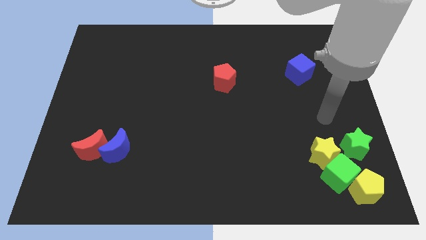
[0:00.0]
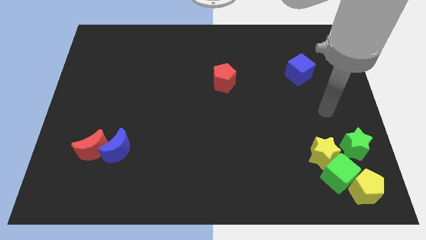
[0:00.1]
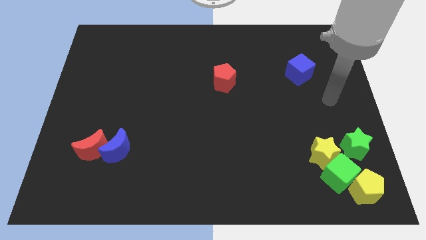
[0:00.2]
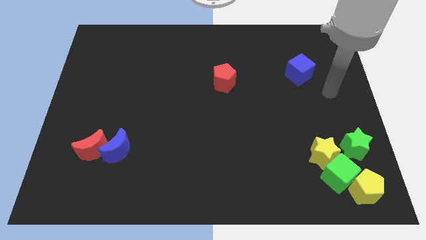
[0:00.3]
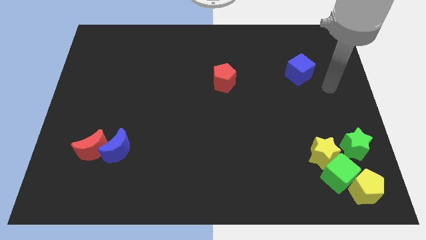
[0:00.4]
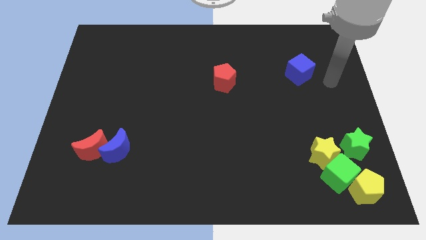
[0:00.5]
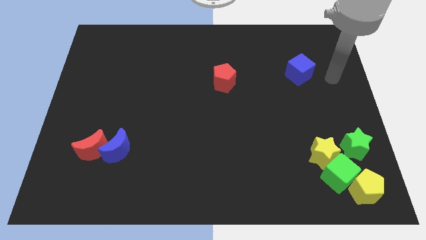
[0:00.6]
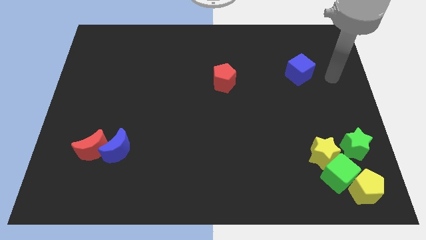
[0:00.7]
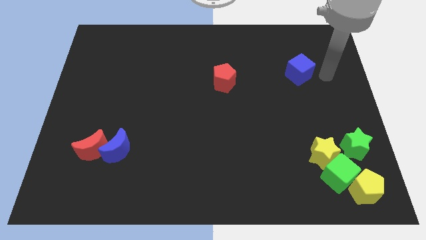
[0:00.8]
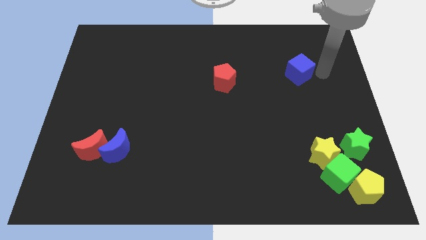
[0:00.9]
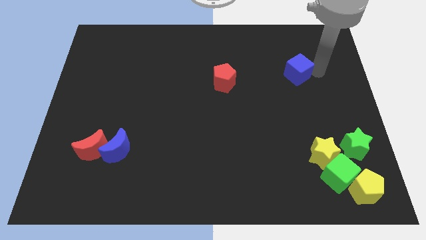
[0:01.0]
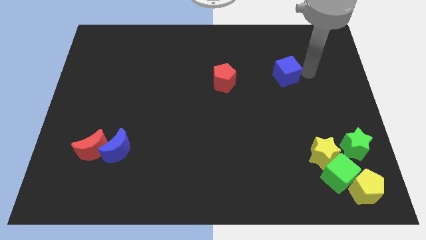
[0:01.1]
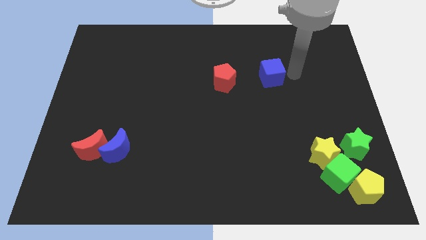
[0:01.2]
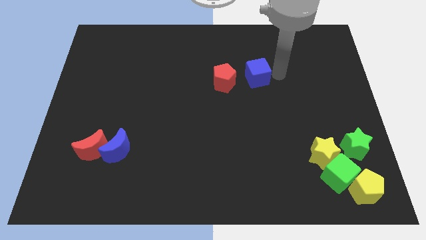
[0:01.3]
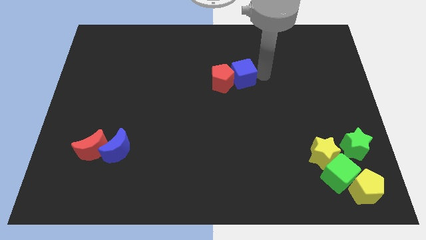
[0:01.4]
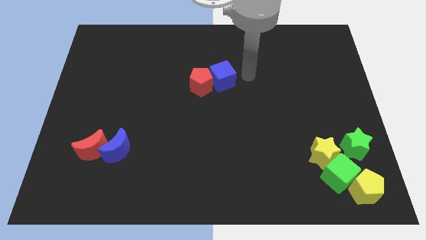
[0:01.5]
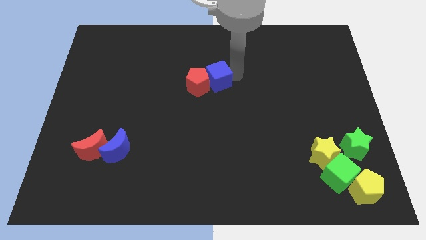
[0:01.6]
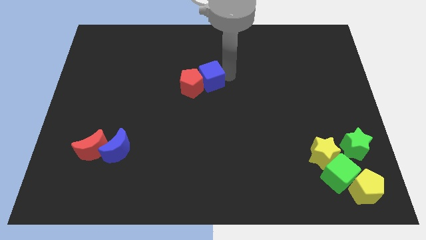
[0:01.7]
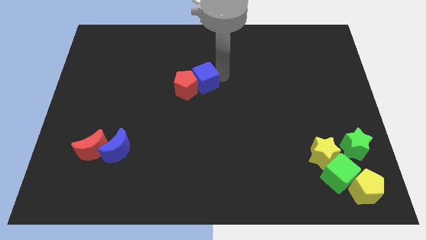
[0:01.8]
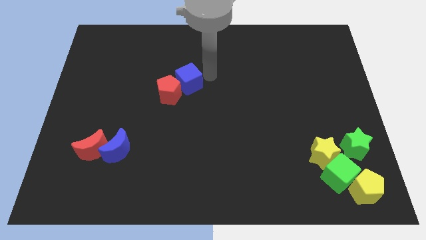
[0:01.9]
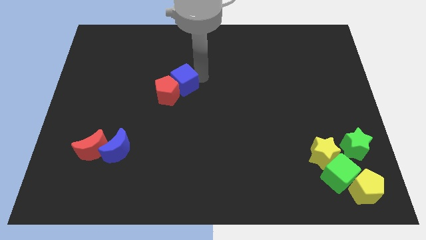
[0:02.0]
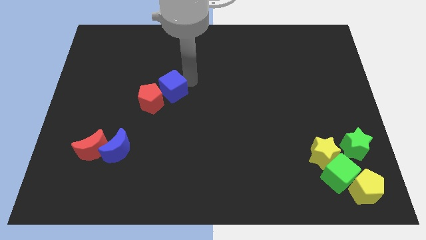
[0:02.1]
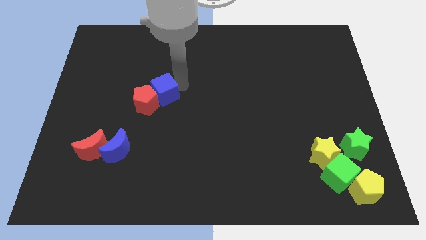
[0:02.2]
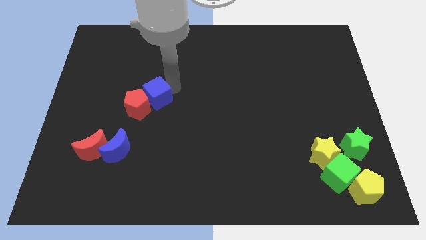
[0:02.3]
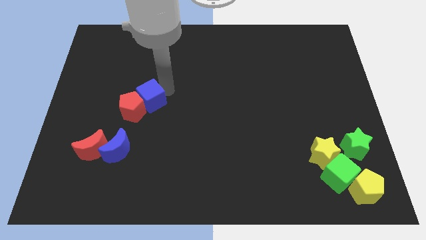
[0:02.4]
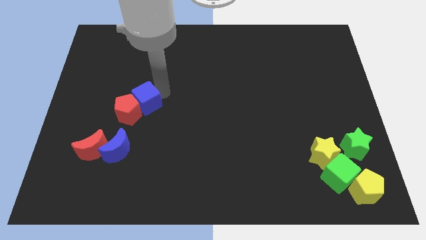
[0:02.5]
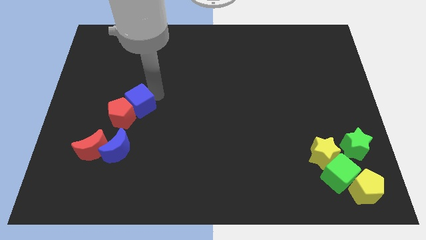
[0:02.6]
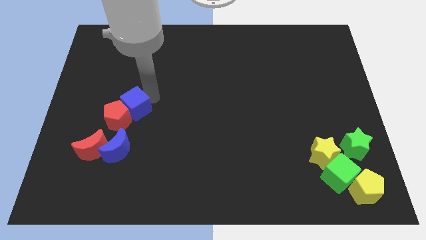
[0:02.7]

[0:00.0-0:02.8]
move the blue cube into the red pentagon

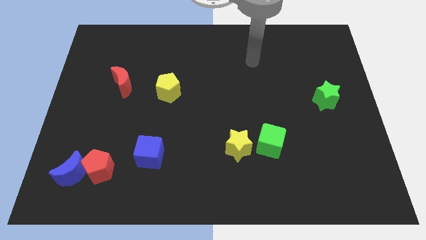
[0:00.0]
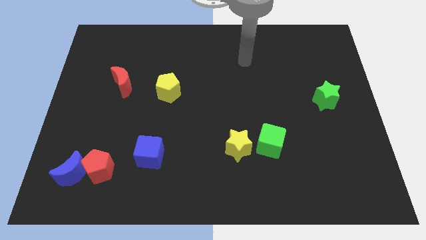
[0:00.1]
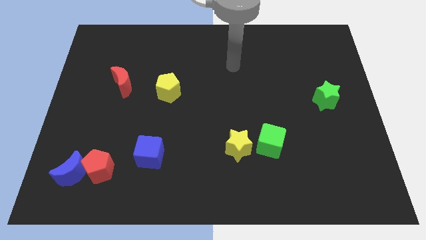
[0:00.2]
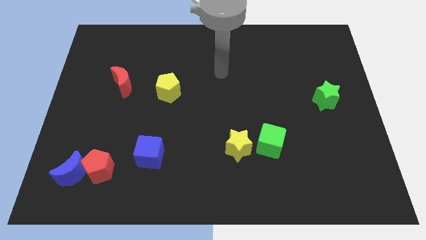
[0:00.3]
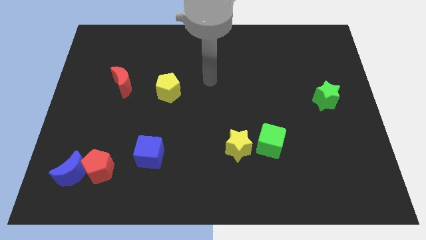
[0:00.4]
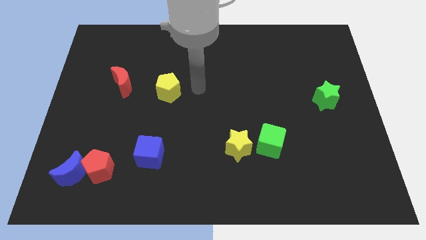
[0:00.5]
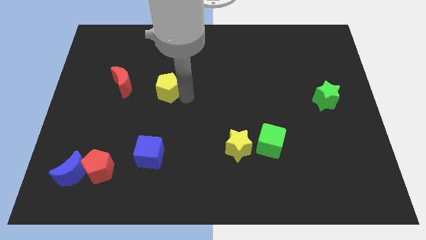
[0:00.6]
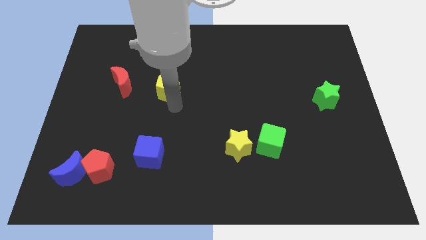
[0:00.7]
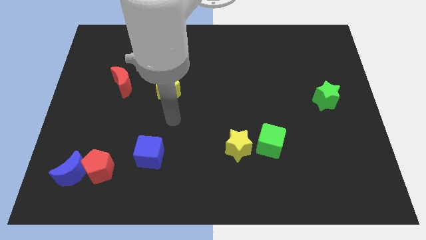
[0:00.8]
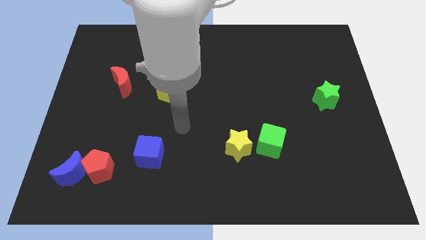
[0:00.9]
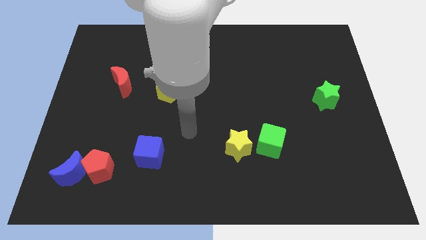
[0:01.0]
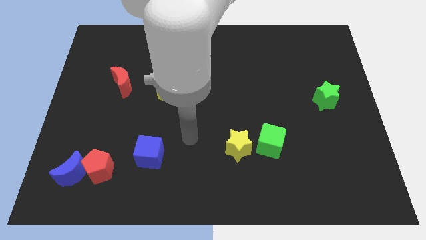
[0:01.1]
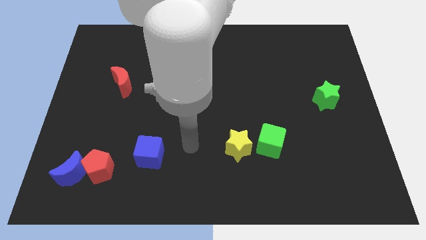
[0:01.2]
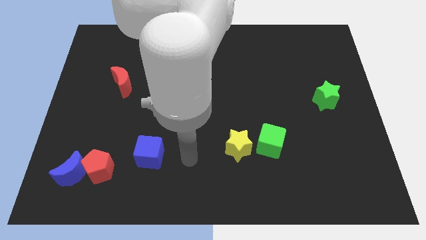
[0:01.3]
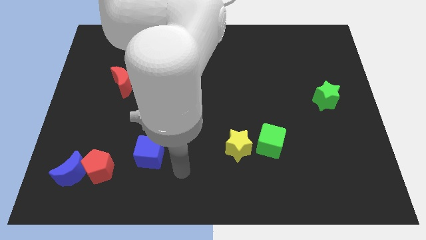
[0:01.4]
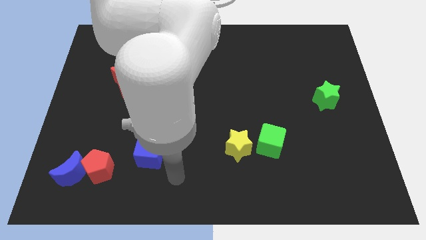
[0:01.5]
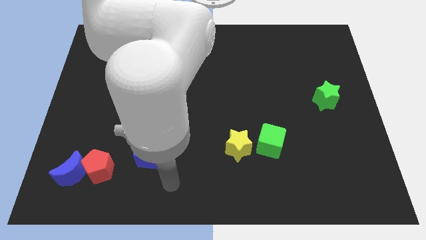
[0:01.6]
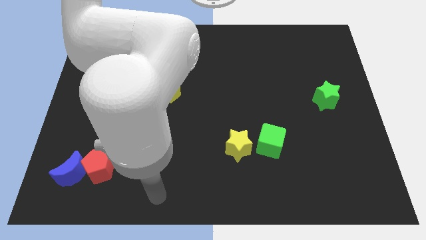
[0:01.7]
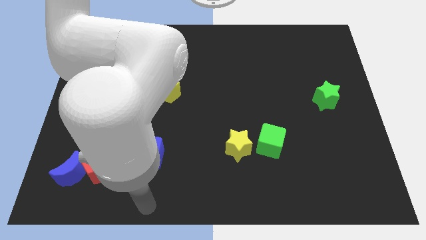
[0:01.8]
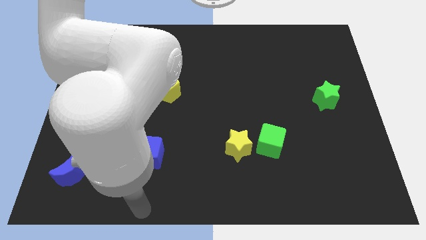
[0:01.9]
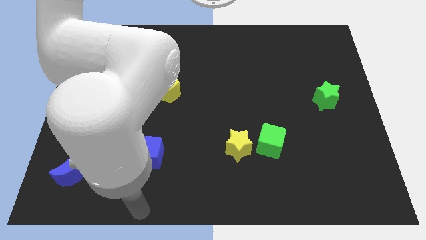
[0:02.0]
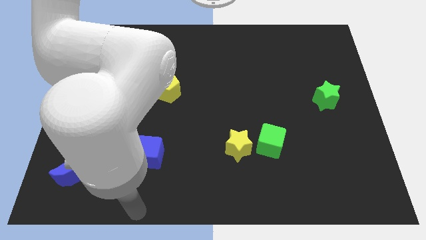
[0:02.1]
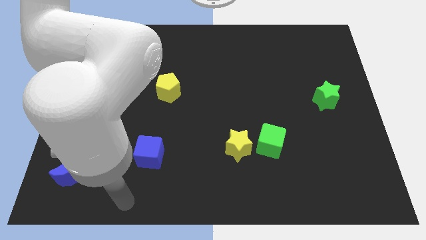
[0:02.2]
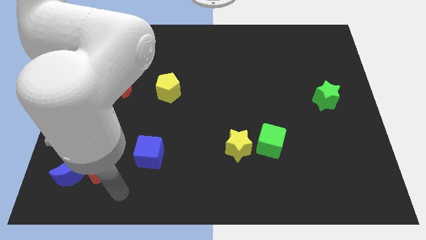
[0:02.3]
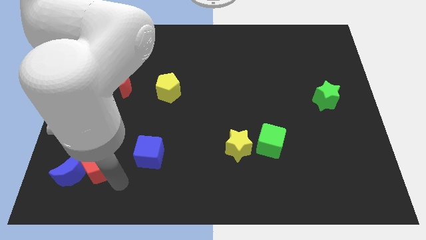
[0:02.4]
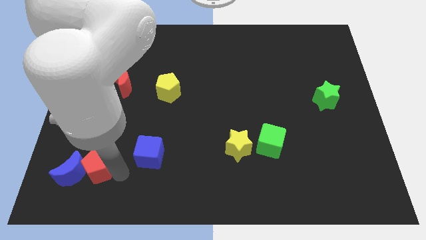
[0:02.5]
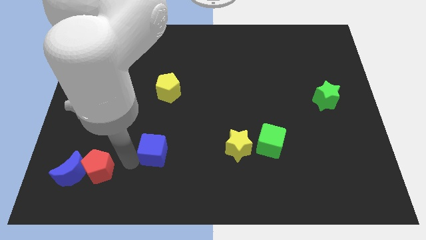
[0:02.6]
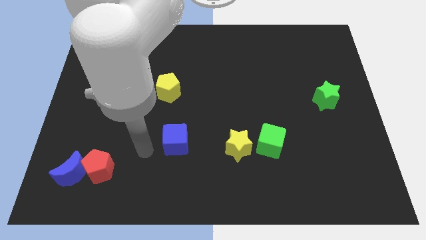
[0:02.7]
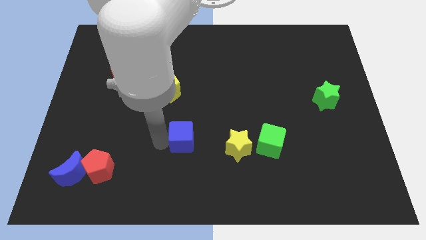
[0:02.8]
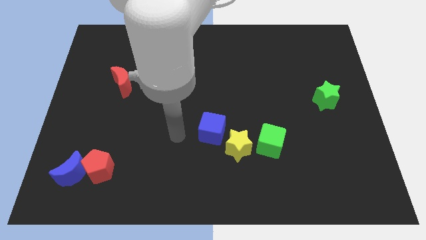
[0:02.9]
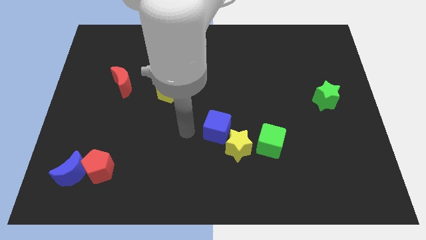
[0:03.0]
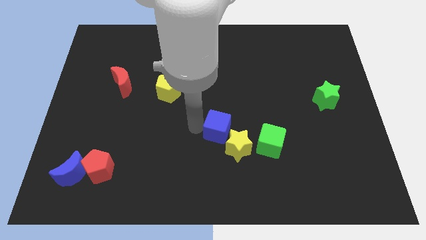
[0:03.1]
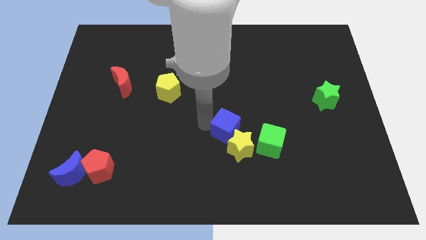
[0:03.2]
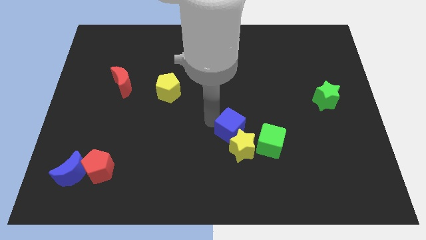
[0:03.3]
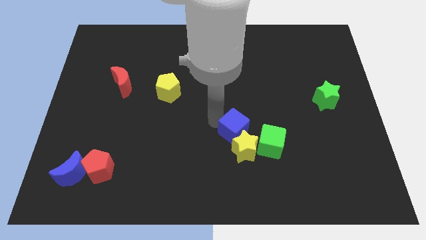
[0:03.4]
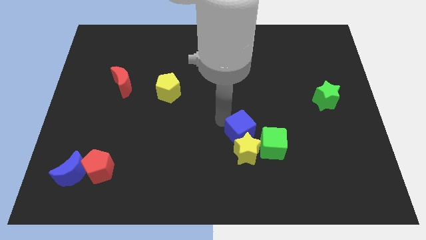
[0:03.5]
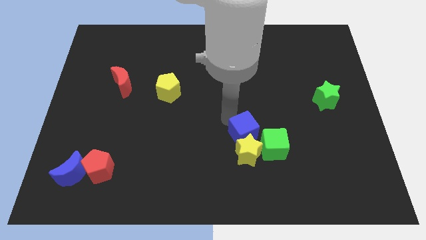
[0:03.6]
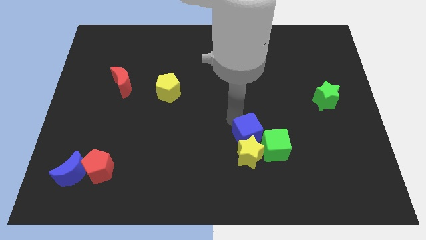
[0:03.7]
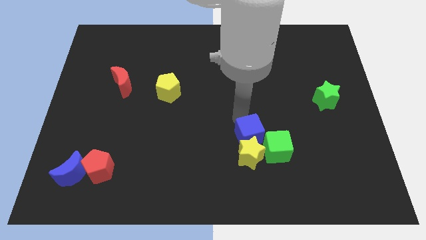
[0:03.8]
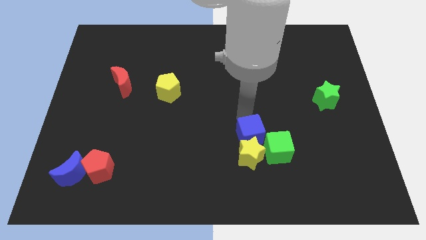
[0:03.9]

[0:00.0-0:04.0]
push the blue cube to the top of the yellow star

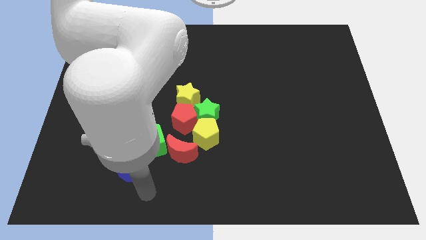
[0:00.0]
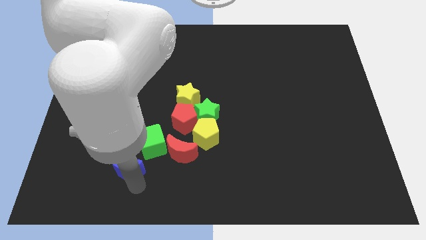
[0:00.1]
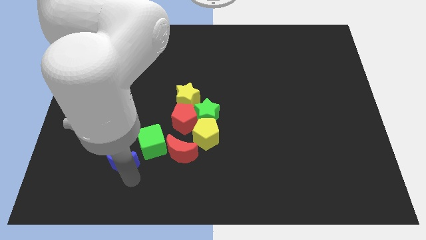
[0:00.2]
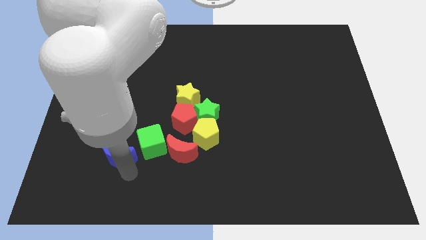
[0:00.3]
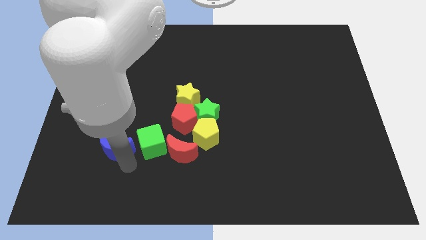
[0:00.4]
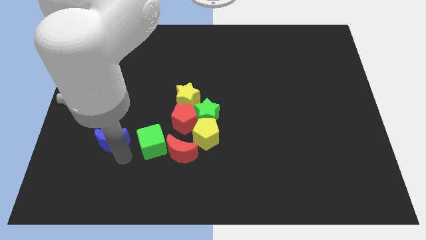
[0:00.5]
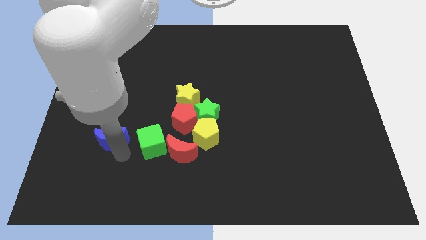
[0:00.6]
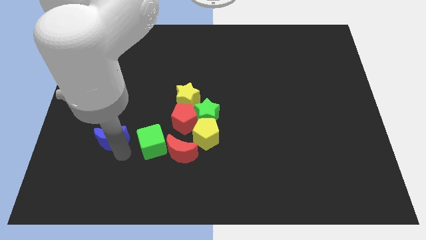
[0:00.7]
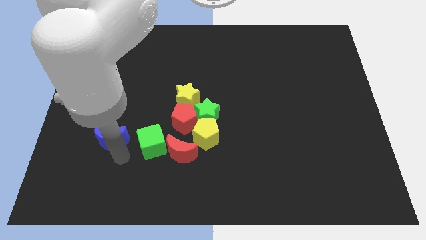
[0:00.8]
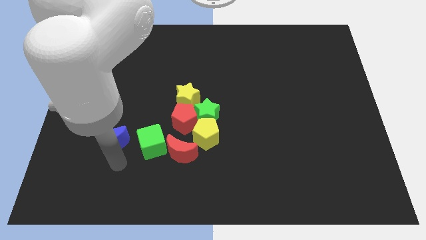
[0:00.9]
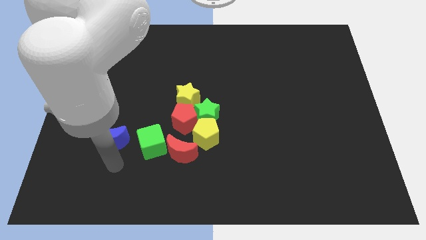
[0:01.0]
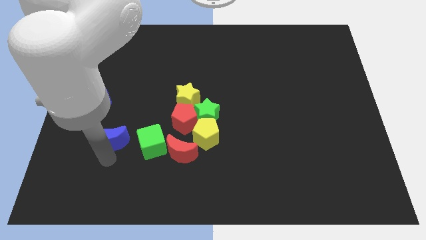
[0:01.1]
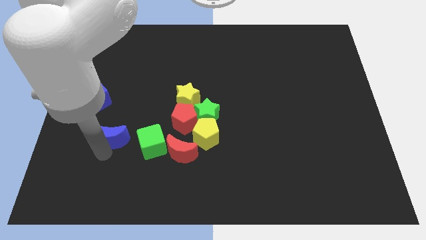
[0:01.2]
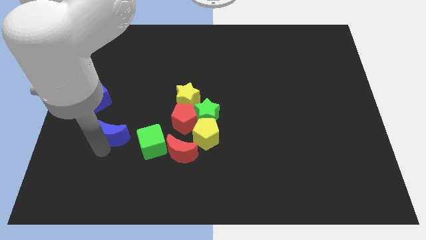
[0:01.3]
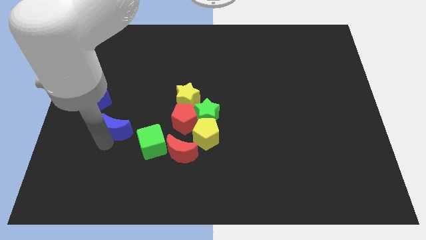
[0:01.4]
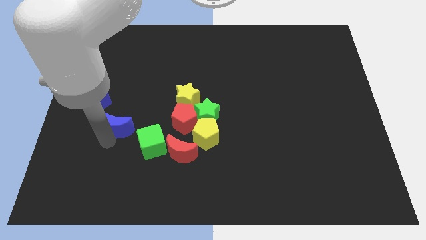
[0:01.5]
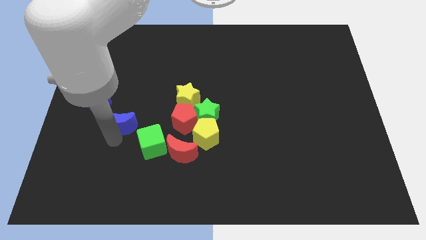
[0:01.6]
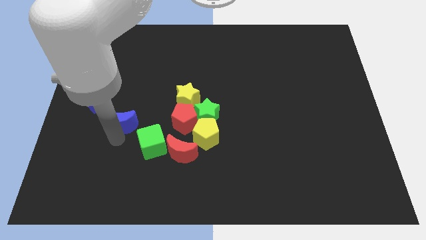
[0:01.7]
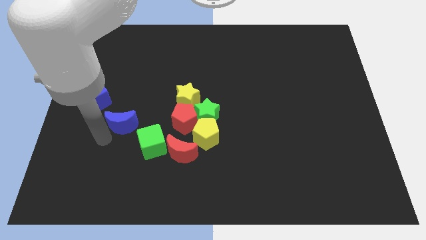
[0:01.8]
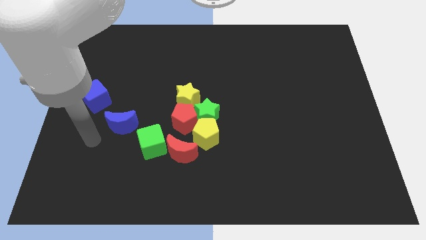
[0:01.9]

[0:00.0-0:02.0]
move blue crescent diagonally in between green cube and blue cube

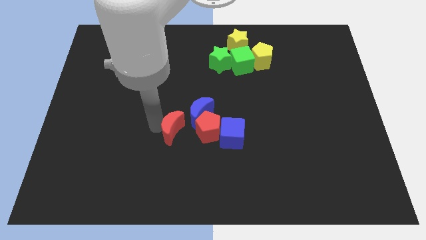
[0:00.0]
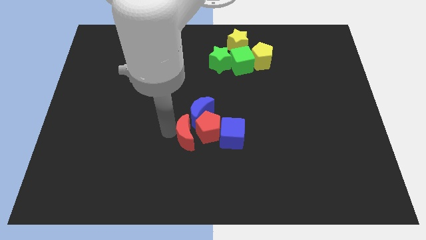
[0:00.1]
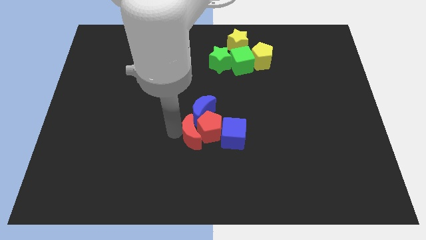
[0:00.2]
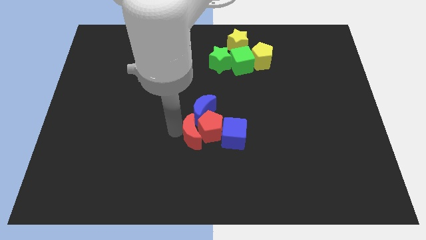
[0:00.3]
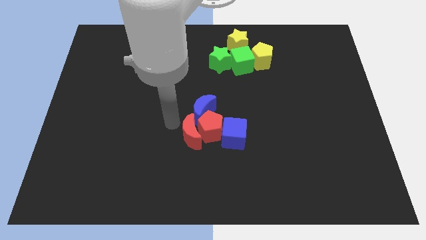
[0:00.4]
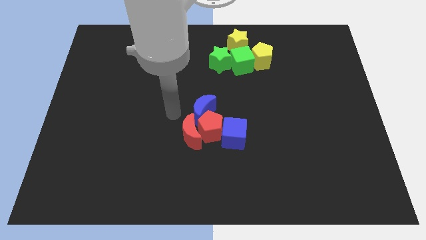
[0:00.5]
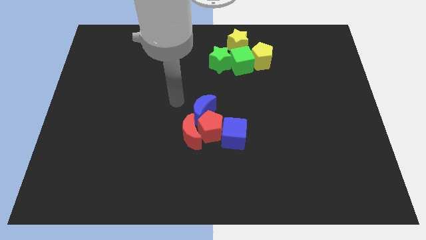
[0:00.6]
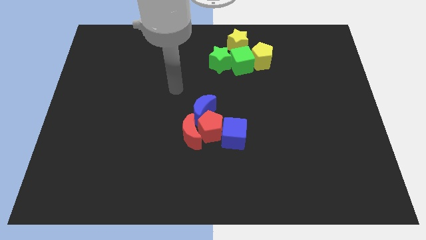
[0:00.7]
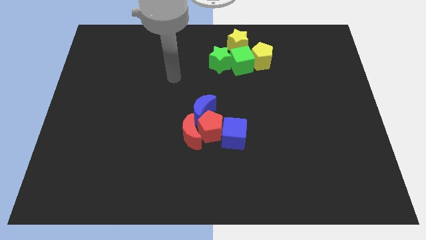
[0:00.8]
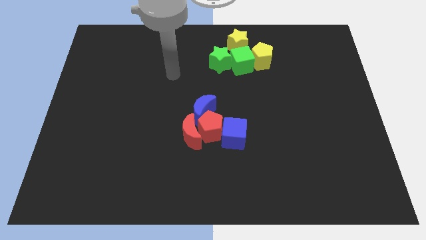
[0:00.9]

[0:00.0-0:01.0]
move the red moon into the blue blocks and red pentagon
